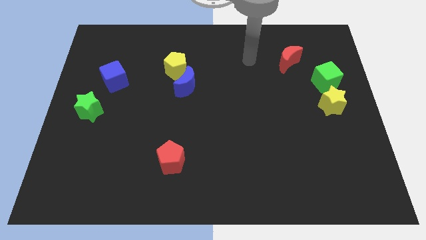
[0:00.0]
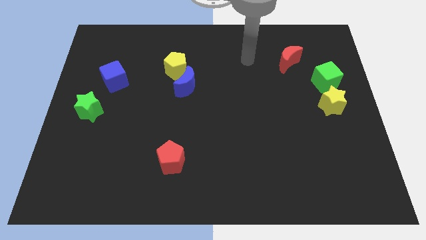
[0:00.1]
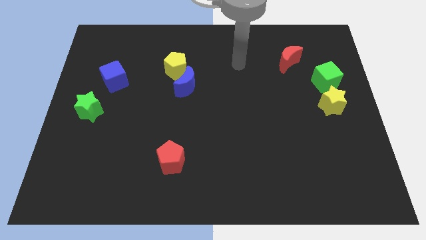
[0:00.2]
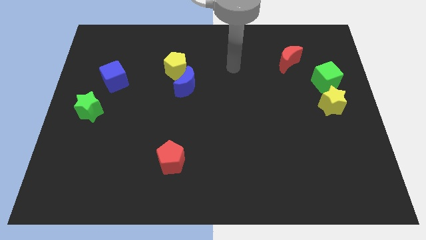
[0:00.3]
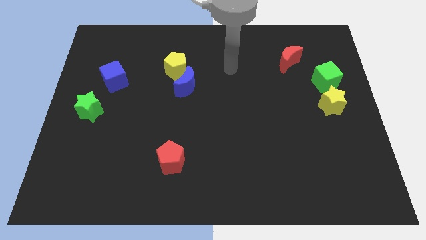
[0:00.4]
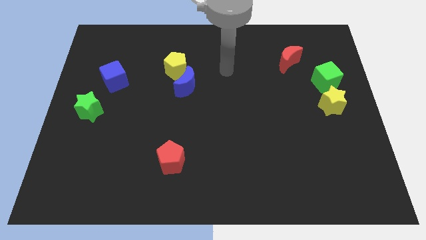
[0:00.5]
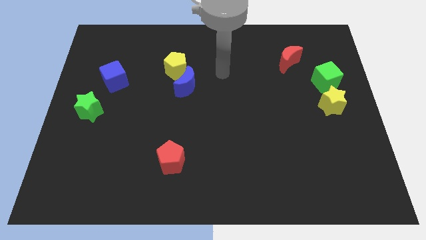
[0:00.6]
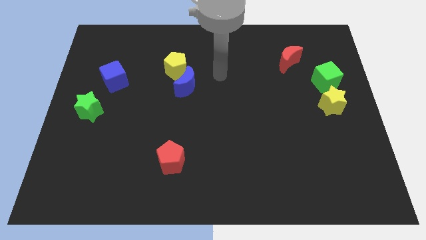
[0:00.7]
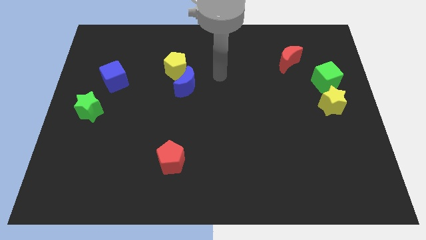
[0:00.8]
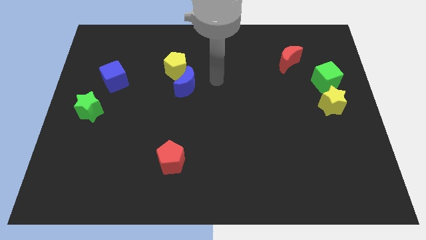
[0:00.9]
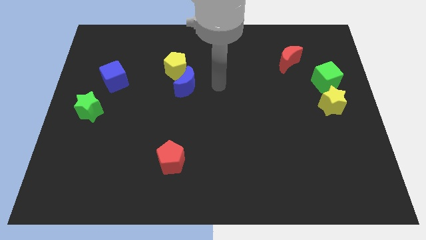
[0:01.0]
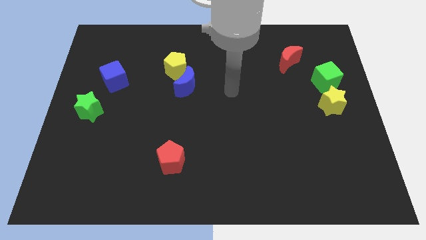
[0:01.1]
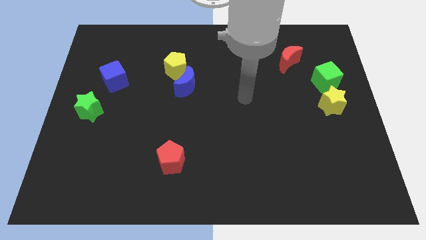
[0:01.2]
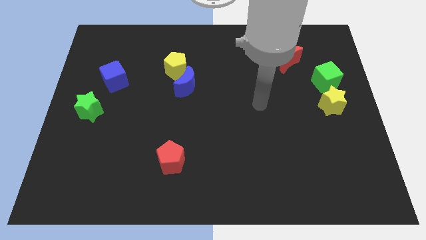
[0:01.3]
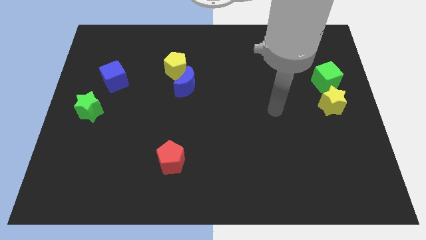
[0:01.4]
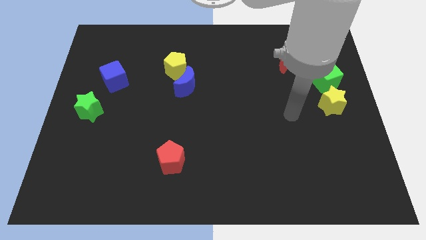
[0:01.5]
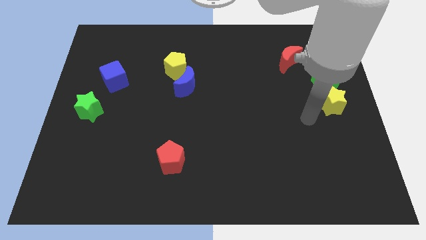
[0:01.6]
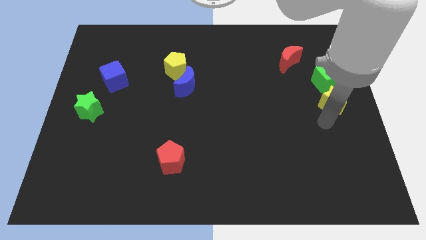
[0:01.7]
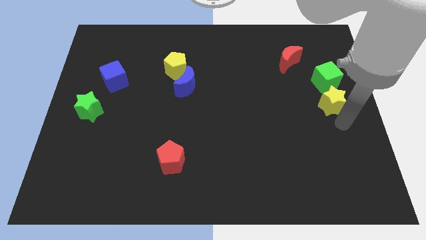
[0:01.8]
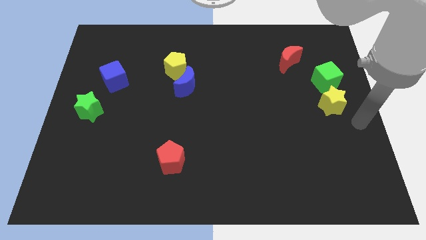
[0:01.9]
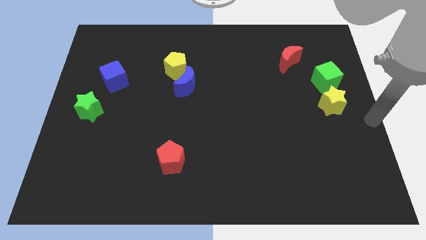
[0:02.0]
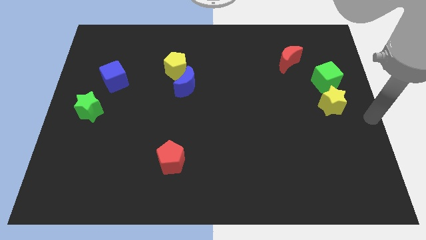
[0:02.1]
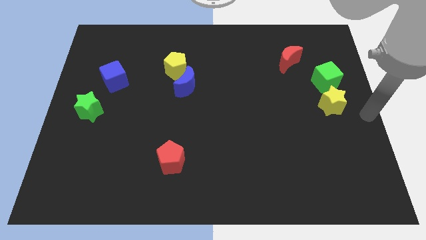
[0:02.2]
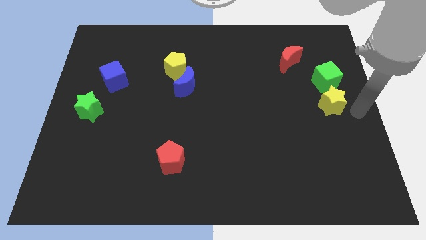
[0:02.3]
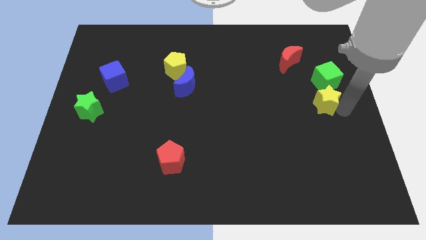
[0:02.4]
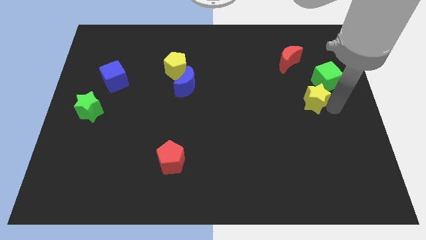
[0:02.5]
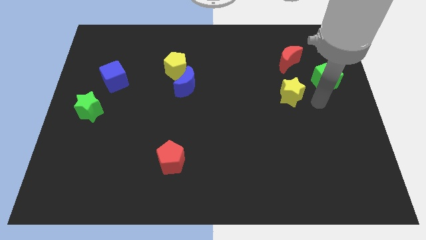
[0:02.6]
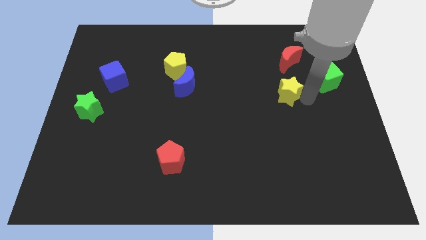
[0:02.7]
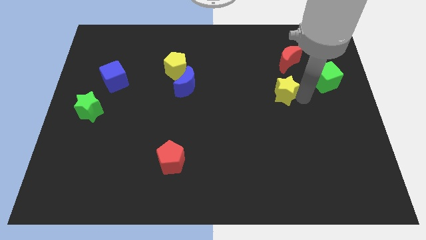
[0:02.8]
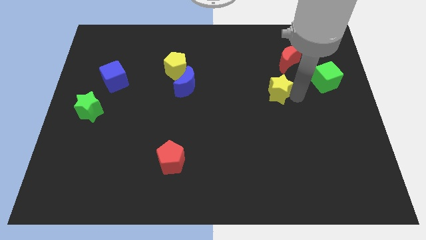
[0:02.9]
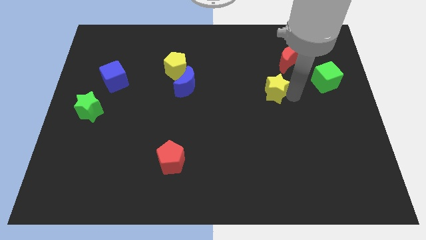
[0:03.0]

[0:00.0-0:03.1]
slide yellow star to the left of green cube

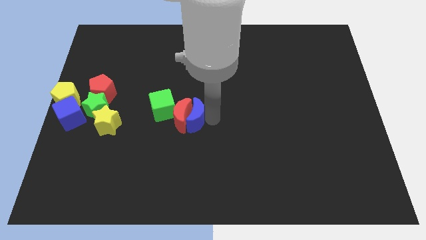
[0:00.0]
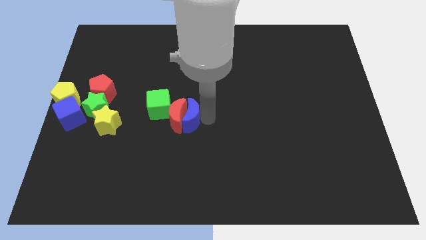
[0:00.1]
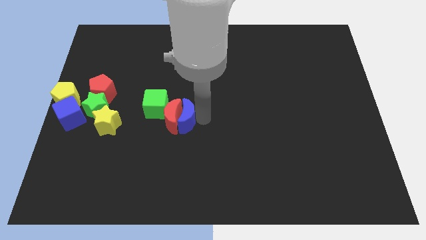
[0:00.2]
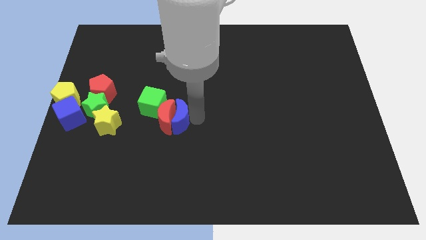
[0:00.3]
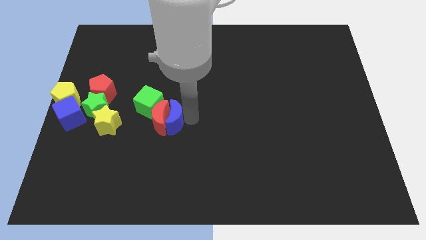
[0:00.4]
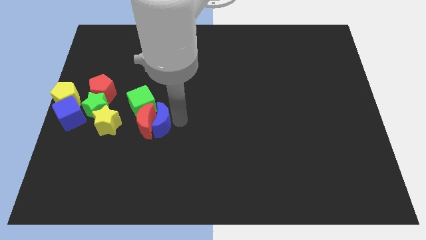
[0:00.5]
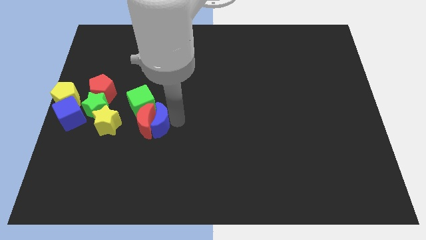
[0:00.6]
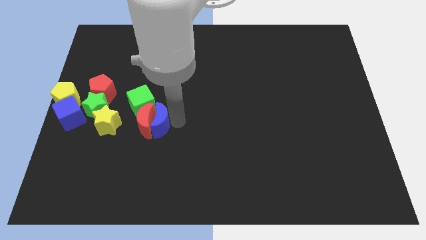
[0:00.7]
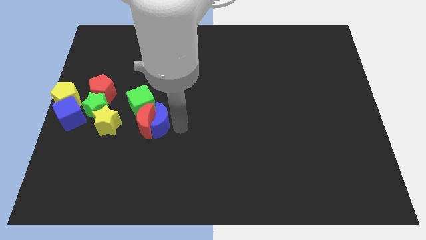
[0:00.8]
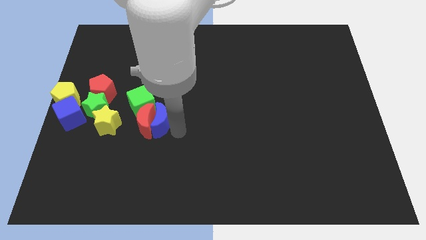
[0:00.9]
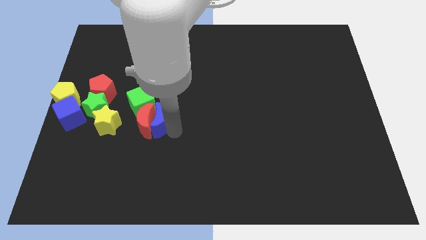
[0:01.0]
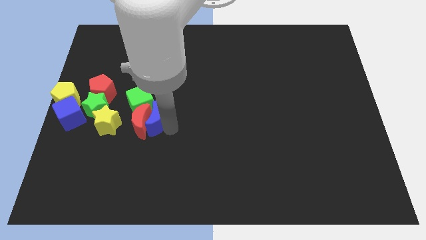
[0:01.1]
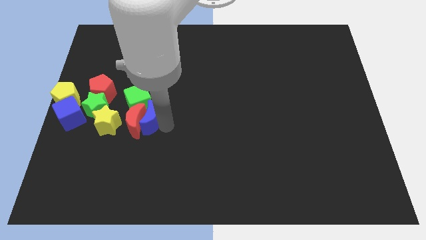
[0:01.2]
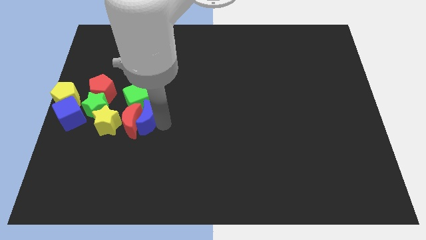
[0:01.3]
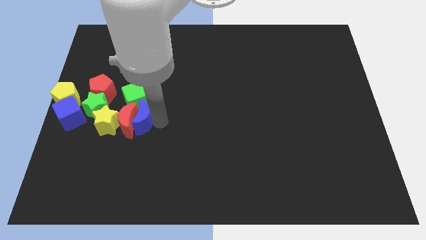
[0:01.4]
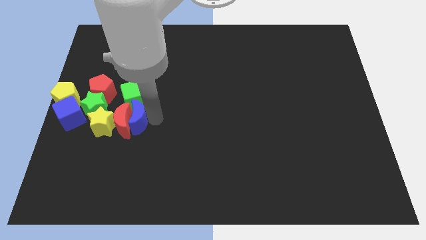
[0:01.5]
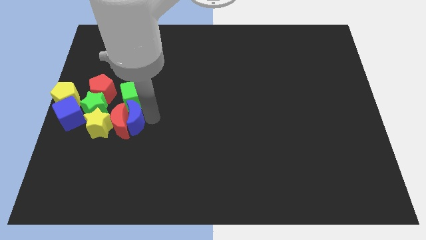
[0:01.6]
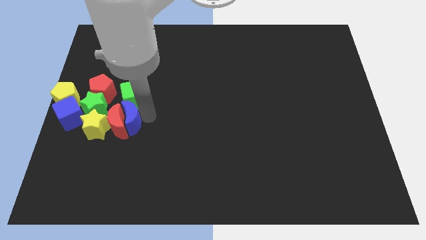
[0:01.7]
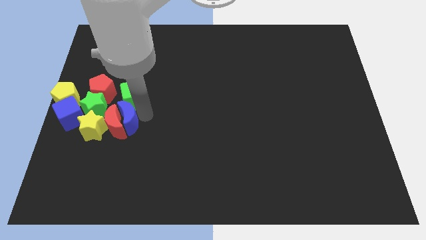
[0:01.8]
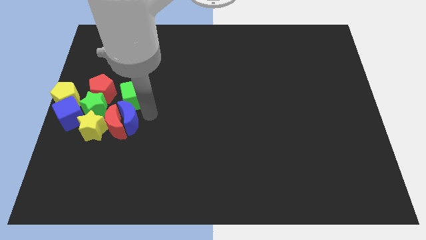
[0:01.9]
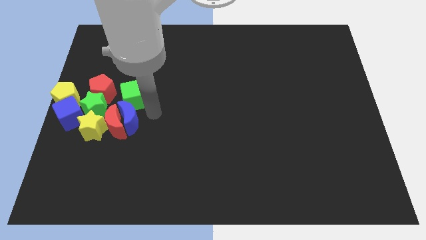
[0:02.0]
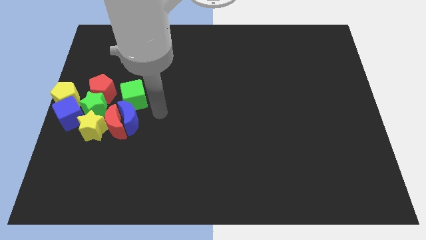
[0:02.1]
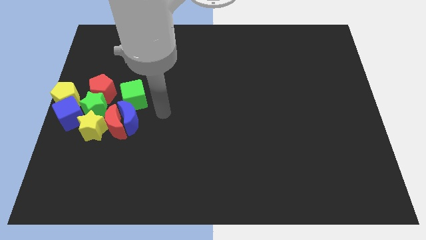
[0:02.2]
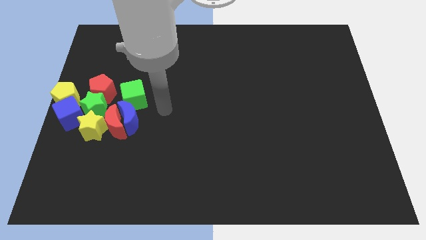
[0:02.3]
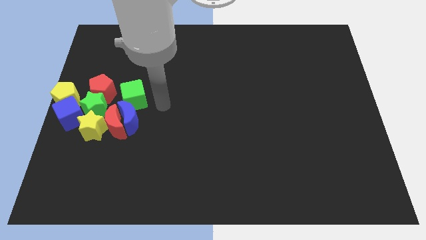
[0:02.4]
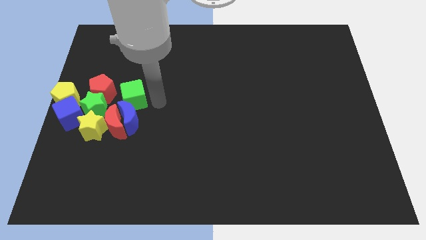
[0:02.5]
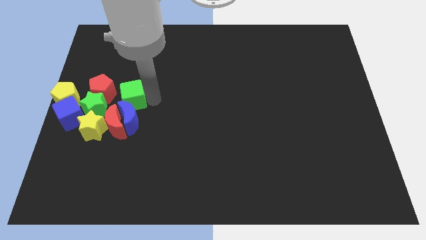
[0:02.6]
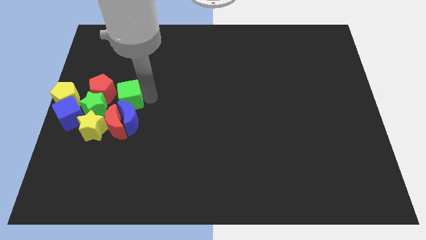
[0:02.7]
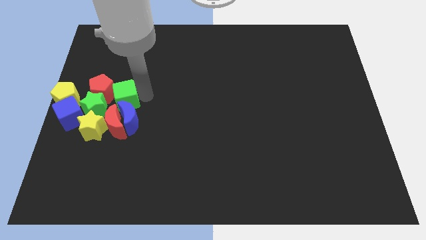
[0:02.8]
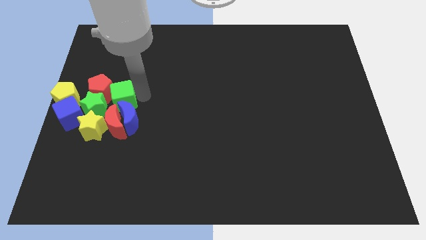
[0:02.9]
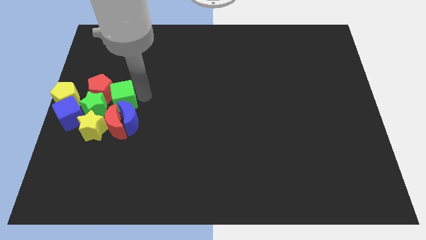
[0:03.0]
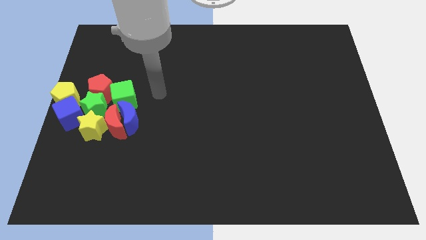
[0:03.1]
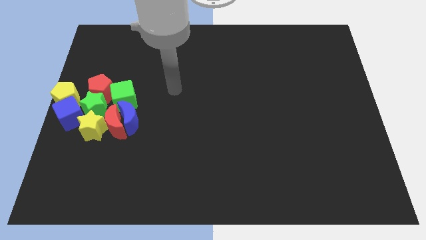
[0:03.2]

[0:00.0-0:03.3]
move blue moon into the group of blocks

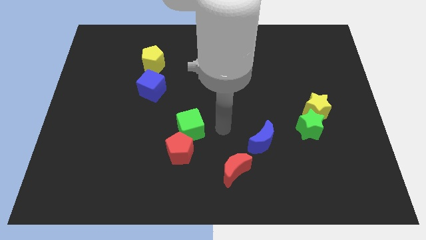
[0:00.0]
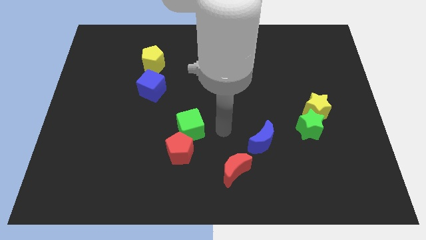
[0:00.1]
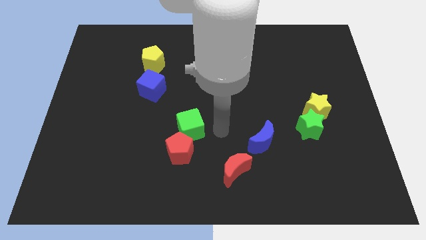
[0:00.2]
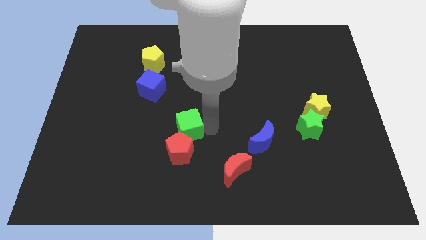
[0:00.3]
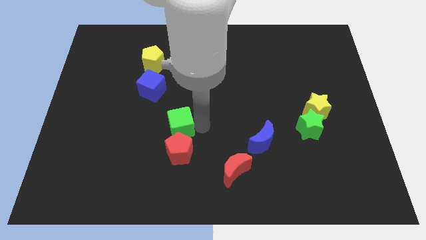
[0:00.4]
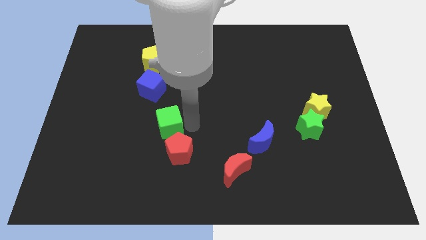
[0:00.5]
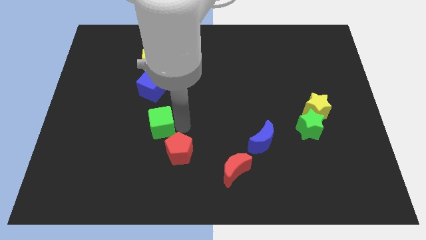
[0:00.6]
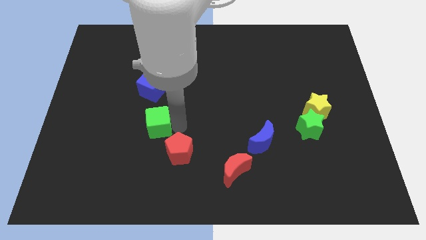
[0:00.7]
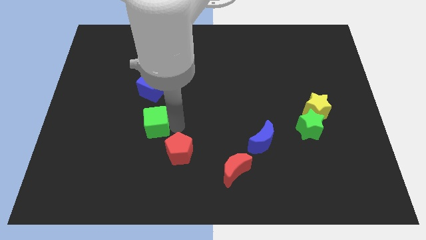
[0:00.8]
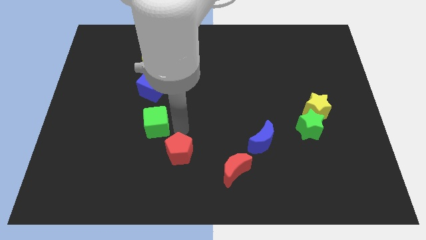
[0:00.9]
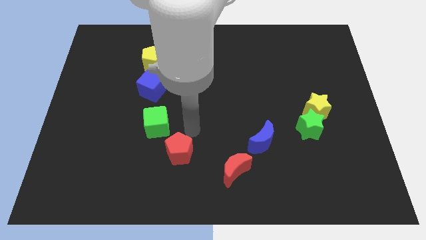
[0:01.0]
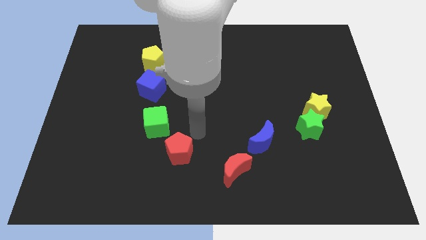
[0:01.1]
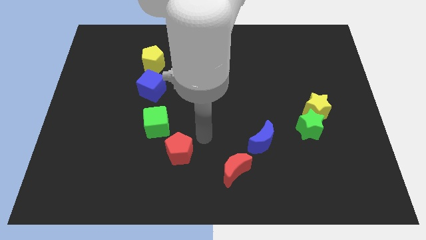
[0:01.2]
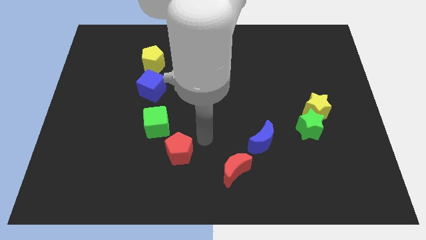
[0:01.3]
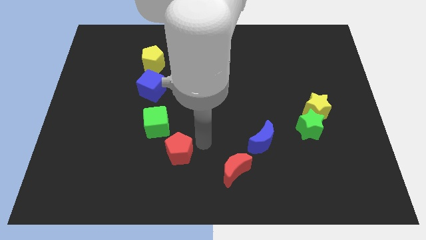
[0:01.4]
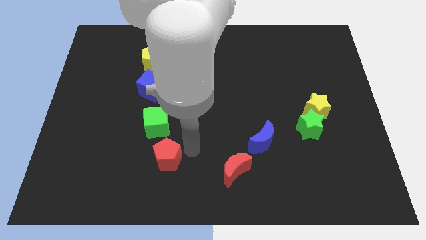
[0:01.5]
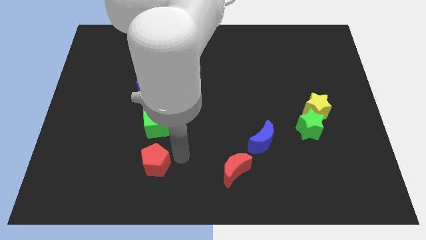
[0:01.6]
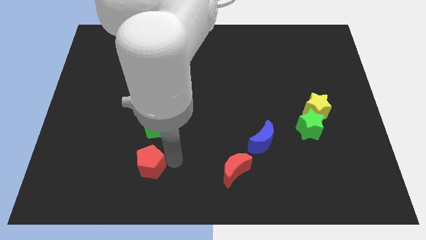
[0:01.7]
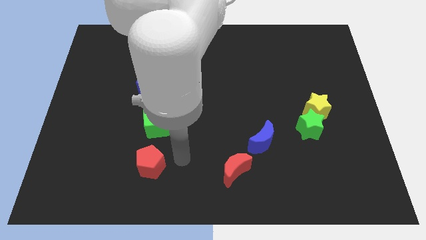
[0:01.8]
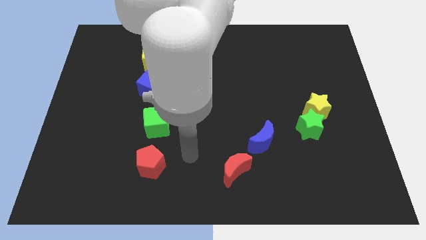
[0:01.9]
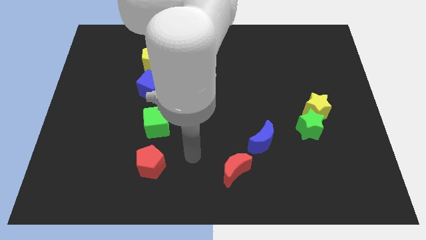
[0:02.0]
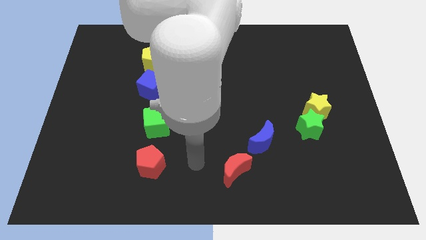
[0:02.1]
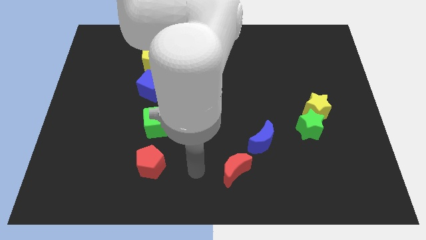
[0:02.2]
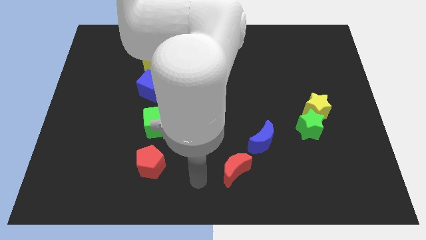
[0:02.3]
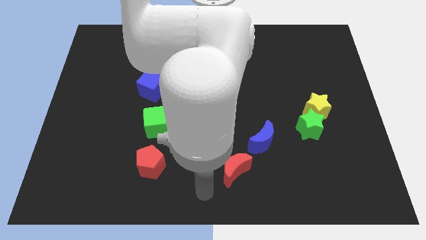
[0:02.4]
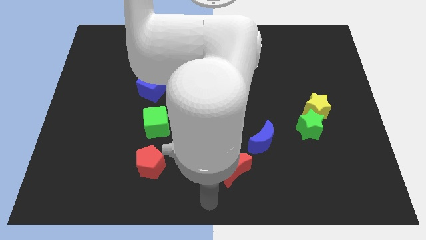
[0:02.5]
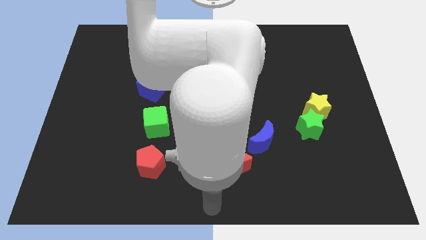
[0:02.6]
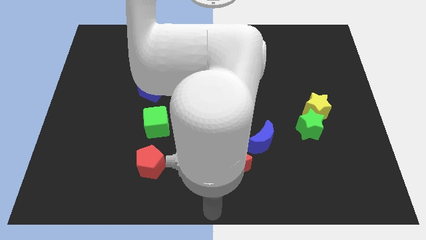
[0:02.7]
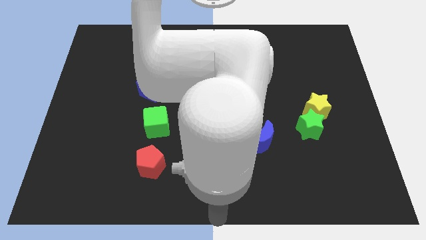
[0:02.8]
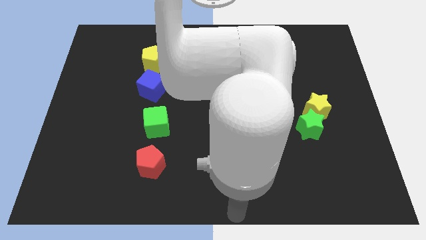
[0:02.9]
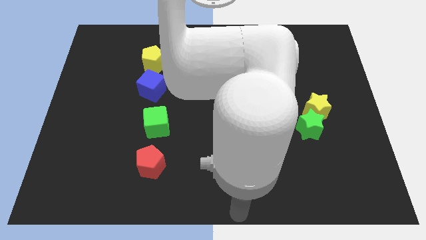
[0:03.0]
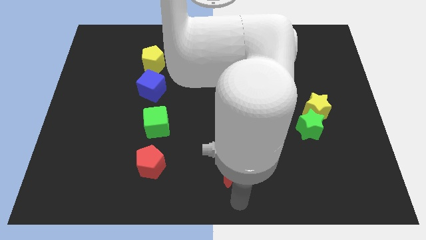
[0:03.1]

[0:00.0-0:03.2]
move the green cube and the red pentagon away from each other
